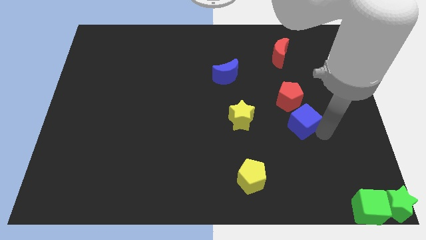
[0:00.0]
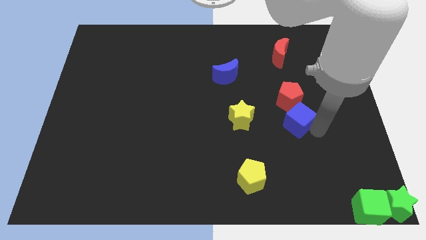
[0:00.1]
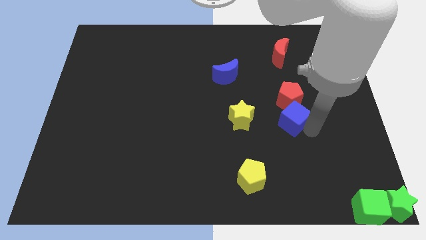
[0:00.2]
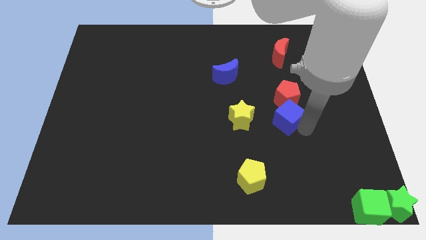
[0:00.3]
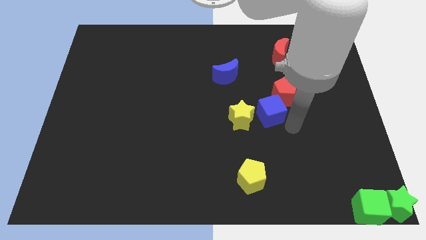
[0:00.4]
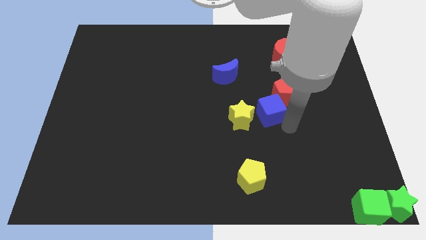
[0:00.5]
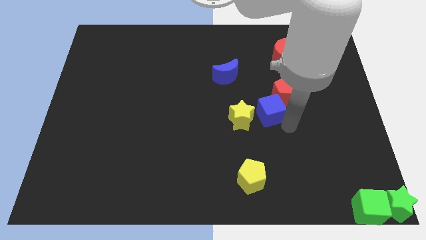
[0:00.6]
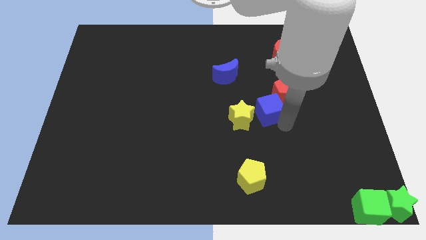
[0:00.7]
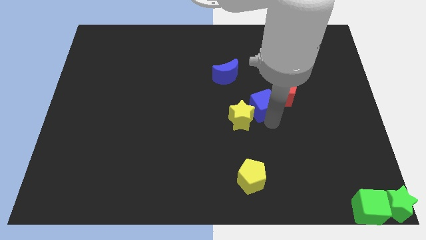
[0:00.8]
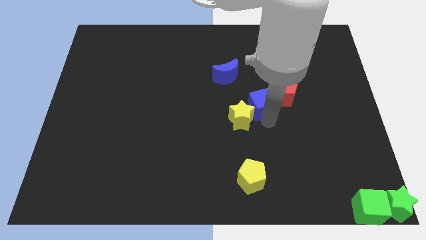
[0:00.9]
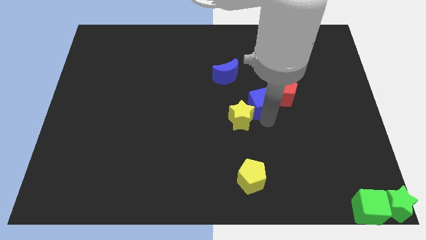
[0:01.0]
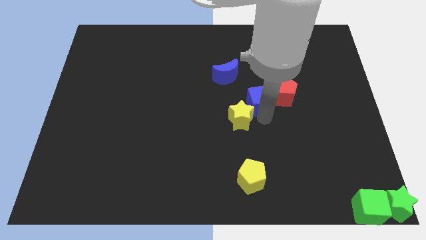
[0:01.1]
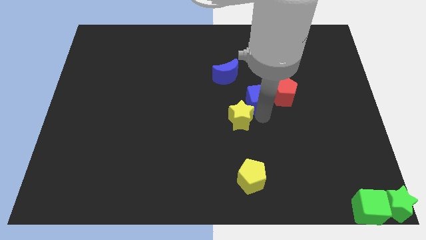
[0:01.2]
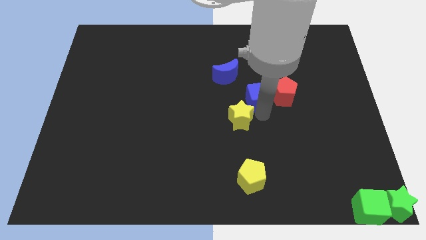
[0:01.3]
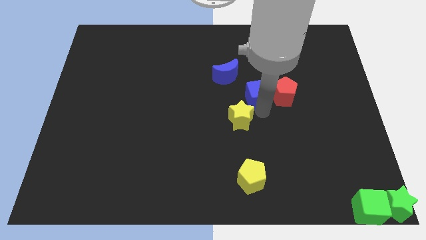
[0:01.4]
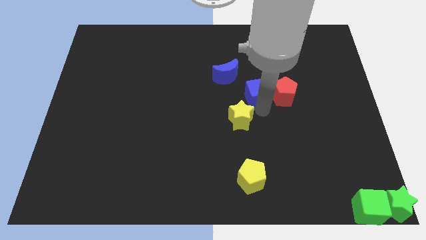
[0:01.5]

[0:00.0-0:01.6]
place blue cube to the left of red pentagon

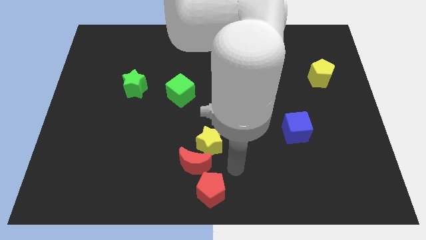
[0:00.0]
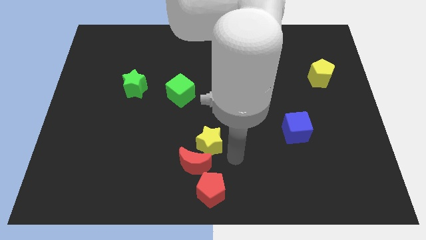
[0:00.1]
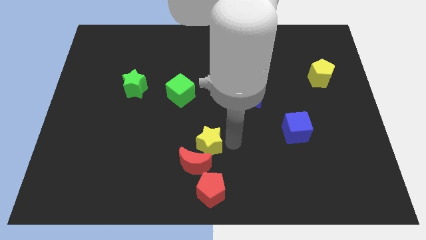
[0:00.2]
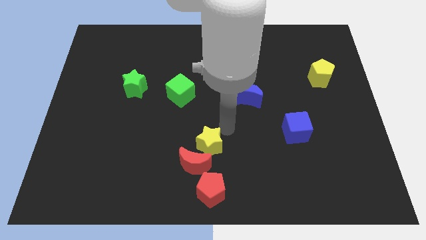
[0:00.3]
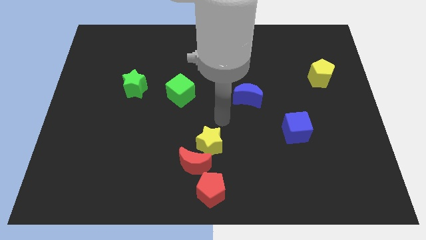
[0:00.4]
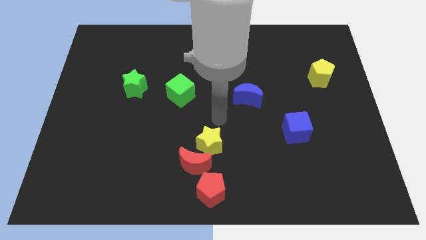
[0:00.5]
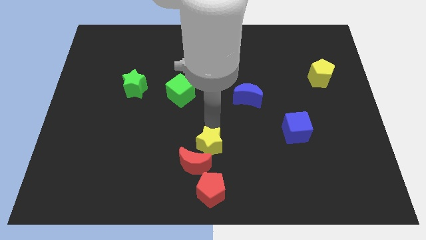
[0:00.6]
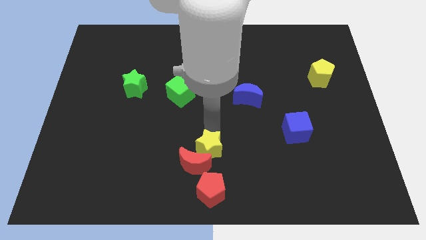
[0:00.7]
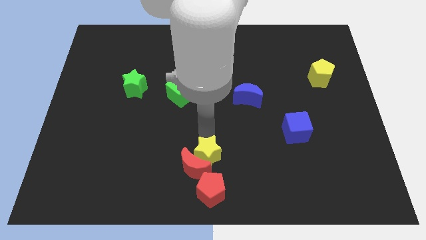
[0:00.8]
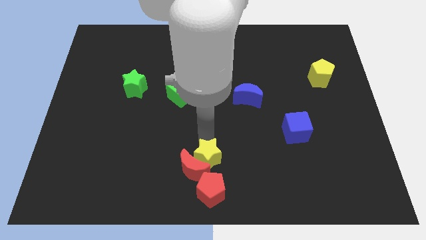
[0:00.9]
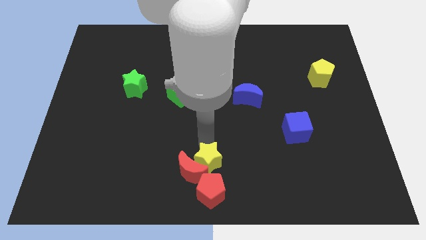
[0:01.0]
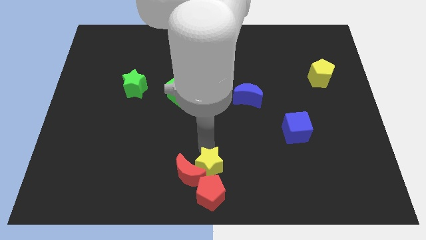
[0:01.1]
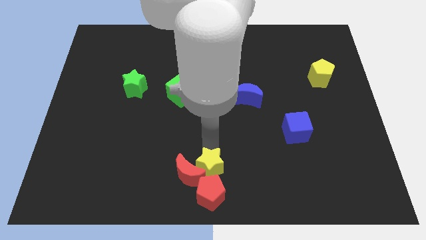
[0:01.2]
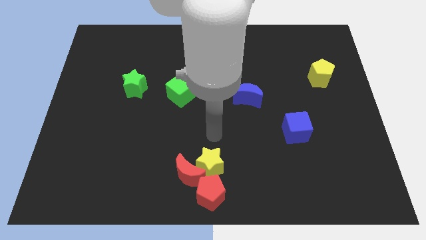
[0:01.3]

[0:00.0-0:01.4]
place the yellow star into the above of the red pentagon

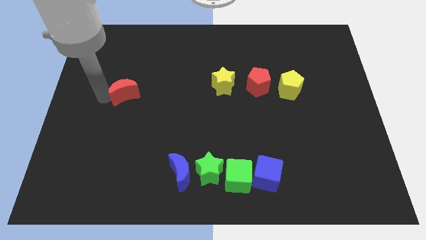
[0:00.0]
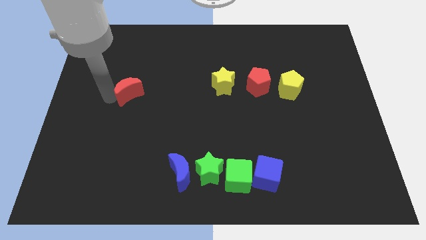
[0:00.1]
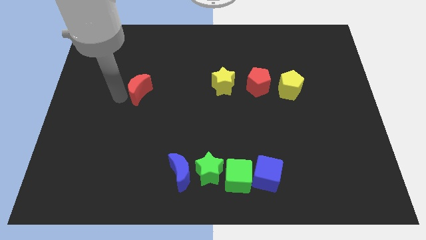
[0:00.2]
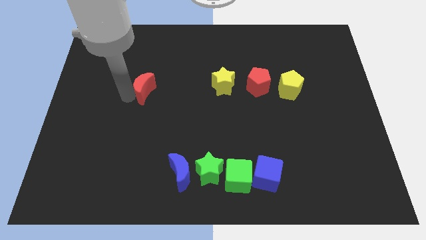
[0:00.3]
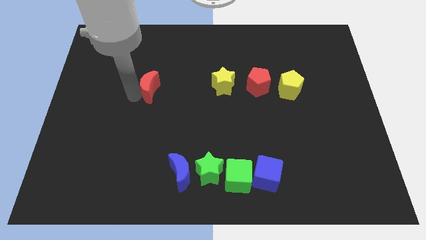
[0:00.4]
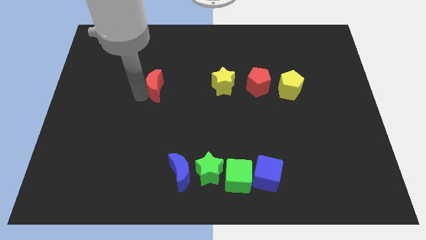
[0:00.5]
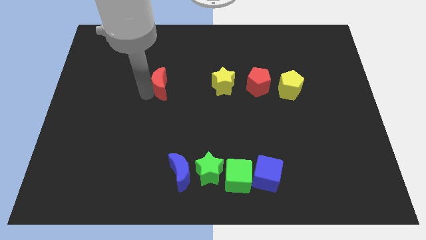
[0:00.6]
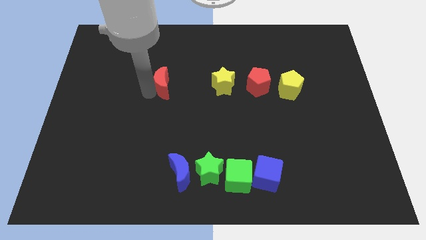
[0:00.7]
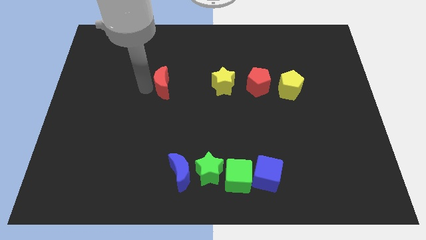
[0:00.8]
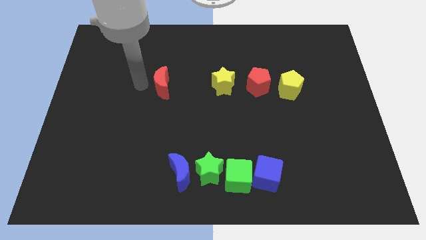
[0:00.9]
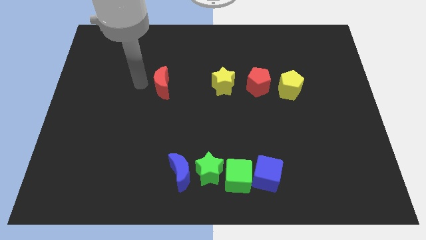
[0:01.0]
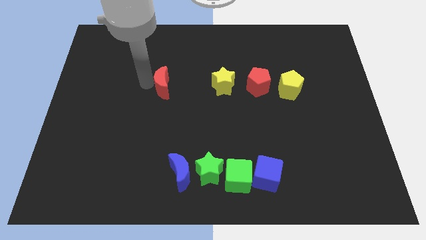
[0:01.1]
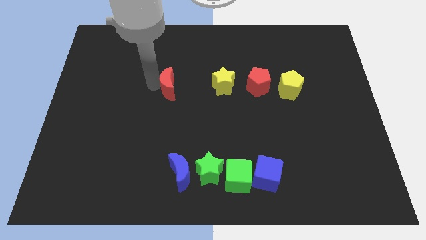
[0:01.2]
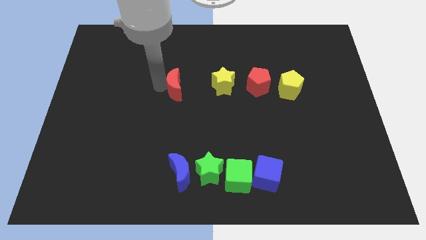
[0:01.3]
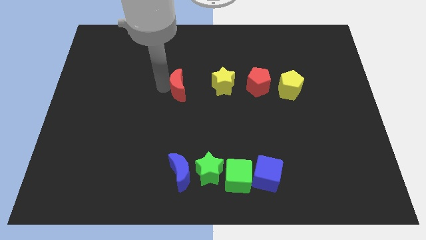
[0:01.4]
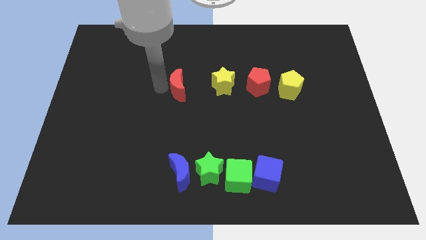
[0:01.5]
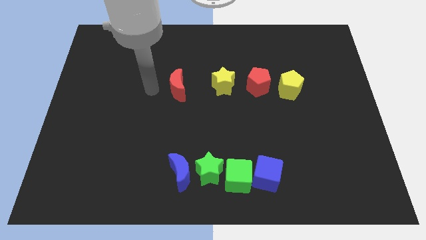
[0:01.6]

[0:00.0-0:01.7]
push the red crescent towards the yellow star

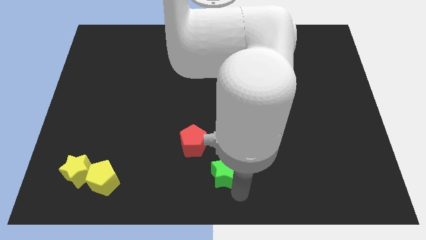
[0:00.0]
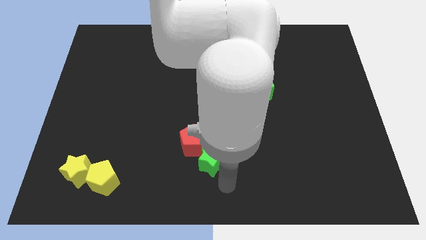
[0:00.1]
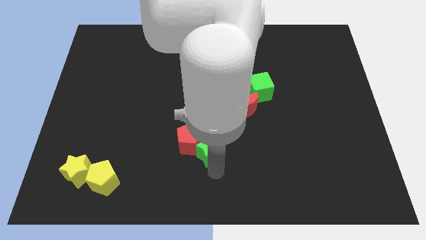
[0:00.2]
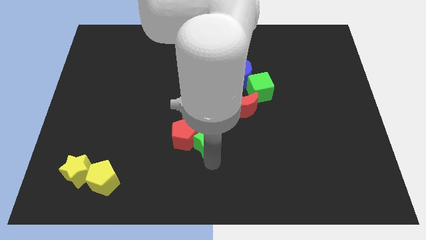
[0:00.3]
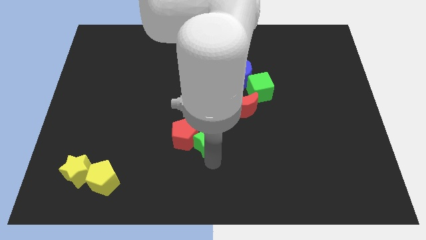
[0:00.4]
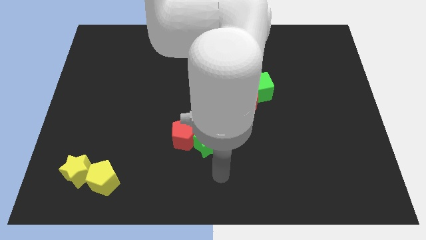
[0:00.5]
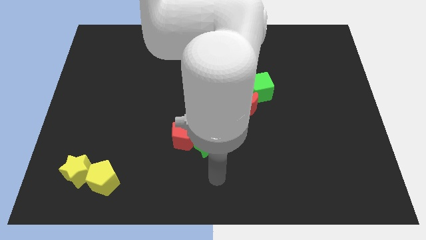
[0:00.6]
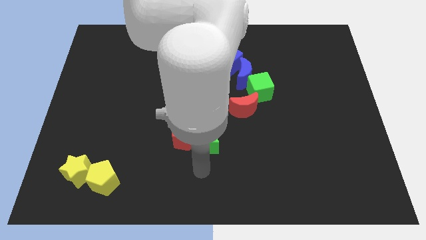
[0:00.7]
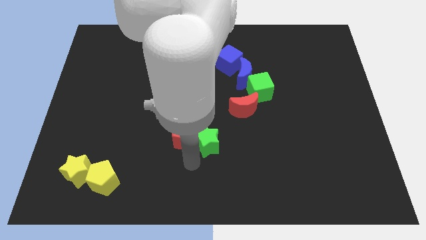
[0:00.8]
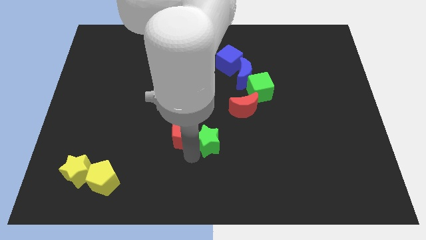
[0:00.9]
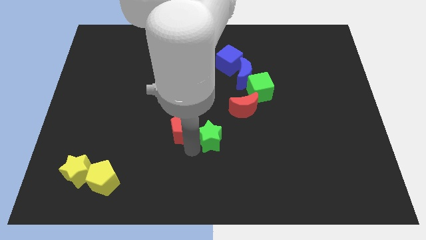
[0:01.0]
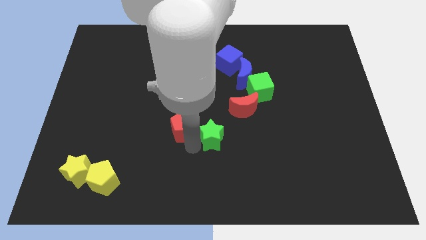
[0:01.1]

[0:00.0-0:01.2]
push the green star into the red pentagon towards the top

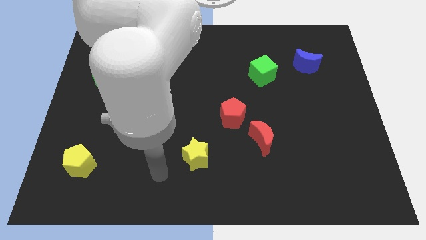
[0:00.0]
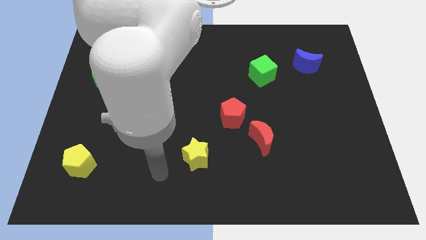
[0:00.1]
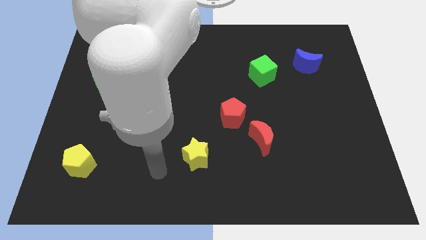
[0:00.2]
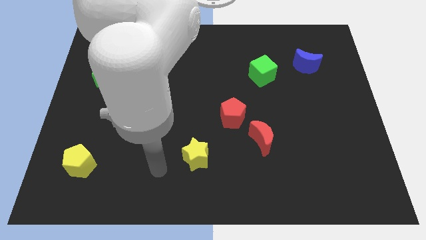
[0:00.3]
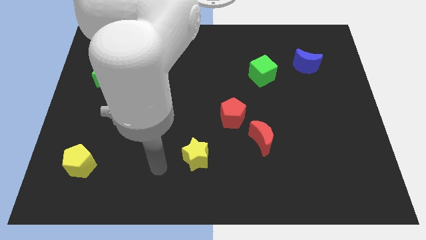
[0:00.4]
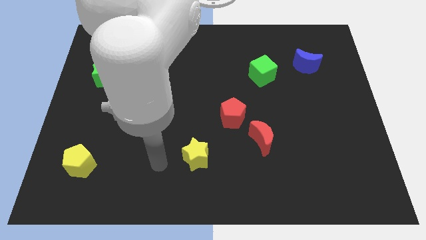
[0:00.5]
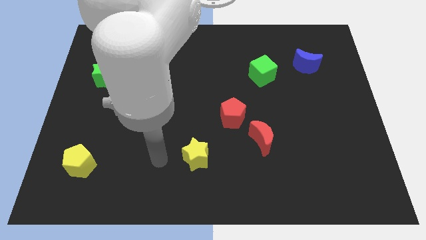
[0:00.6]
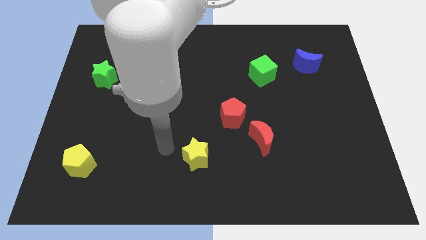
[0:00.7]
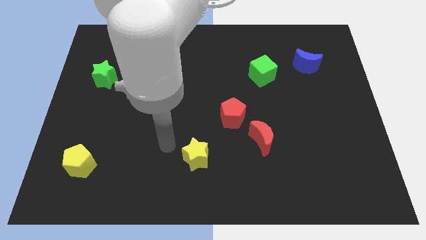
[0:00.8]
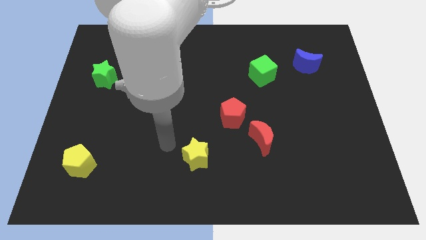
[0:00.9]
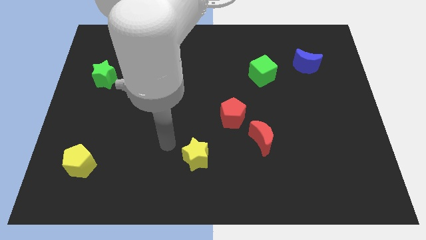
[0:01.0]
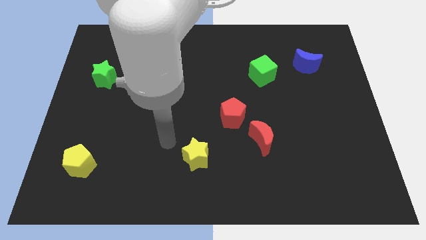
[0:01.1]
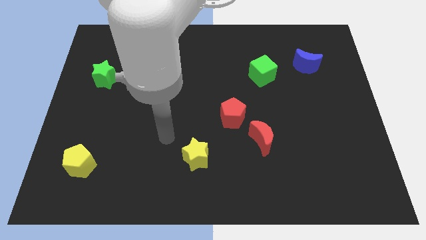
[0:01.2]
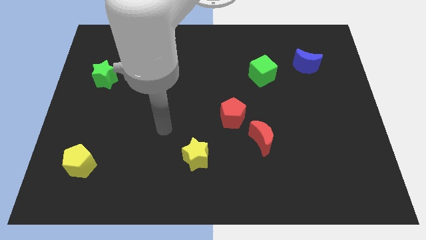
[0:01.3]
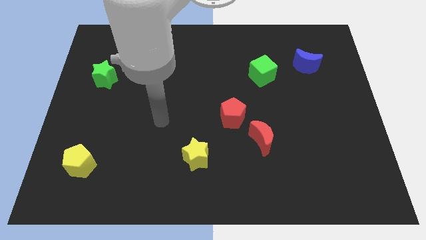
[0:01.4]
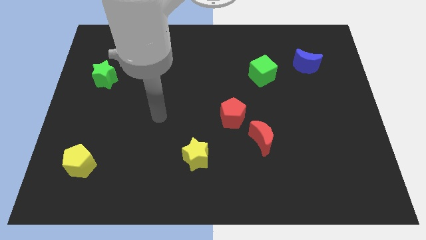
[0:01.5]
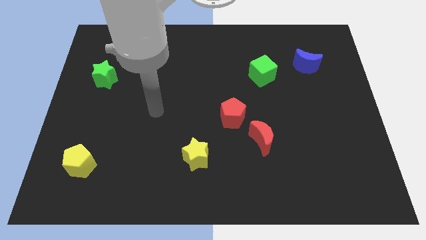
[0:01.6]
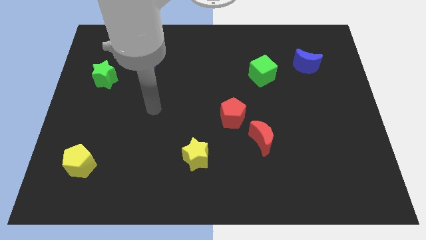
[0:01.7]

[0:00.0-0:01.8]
put arm in between yellow star and green star

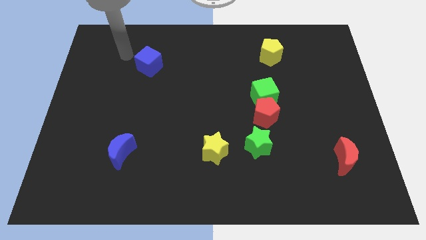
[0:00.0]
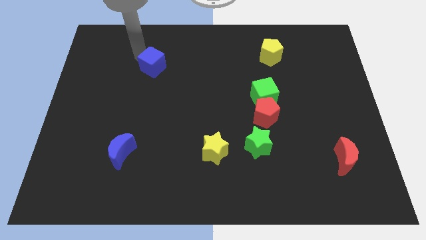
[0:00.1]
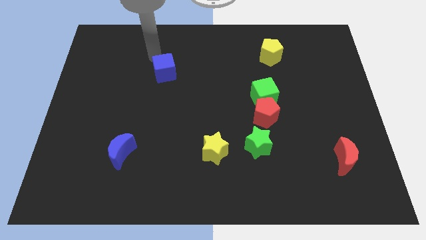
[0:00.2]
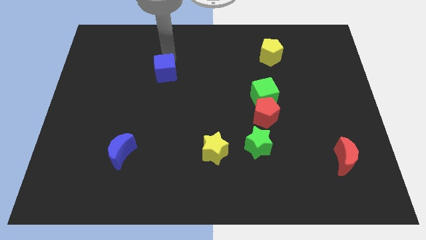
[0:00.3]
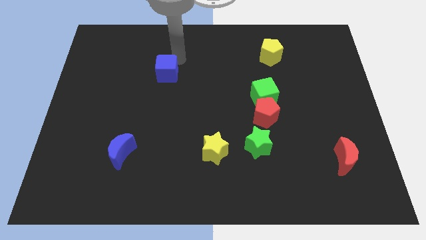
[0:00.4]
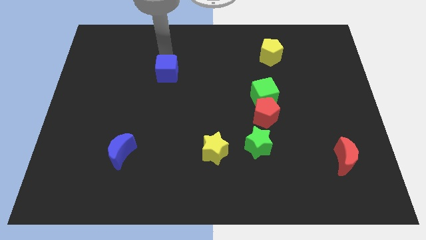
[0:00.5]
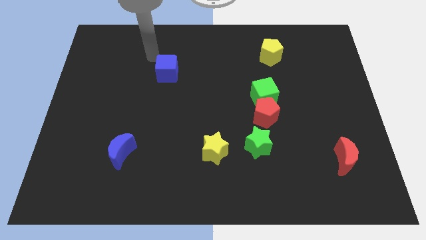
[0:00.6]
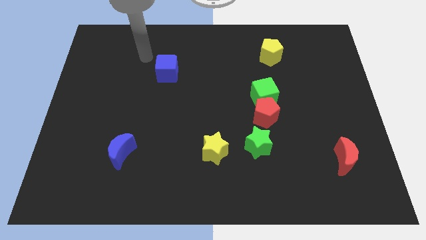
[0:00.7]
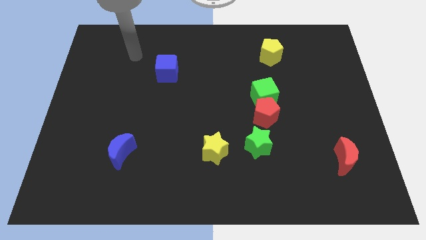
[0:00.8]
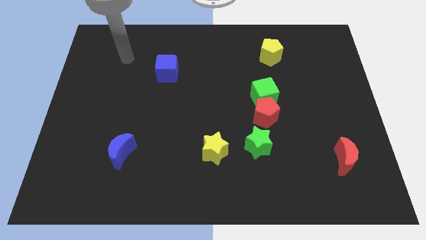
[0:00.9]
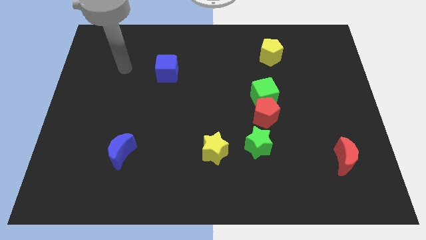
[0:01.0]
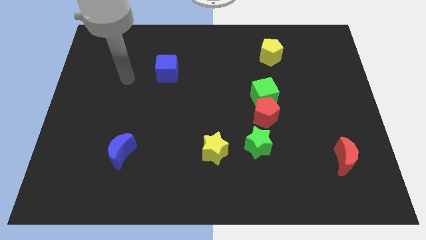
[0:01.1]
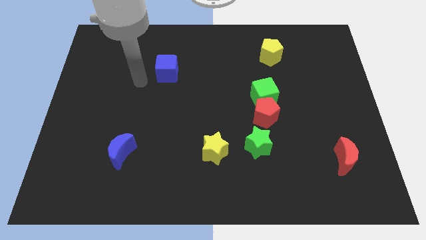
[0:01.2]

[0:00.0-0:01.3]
move the blue cube diagonal to the yellow star
